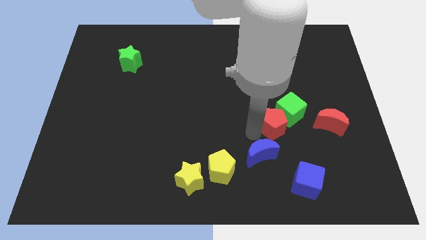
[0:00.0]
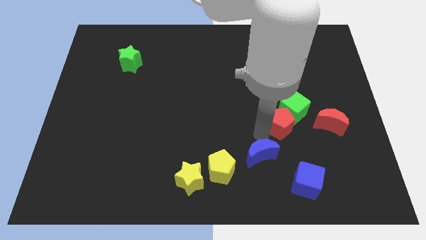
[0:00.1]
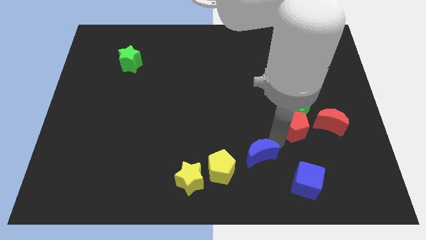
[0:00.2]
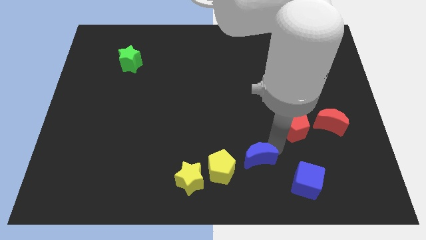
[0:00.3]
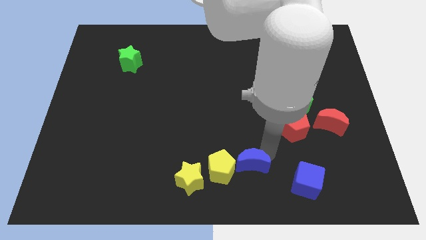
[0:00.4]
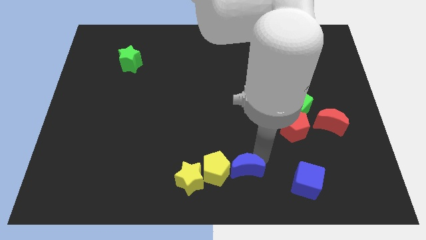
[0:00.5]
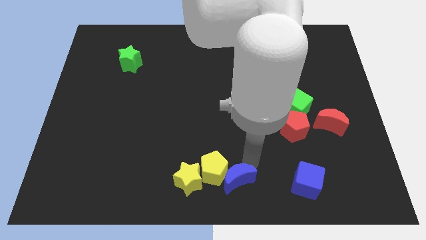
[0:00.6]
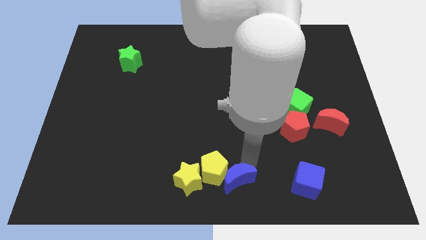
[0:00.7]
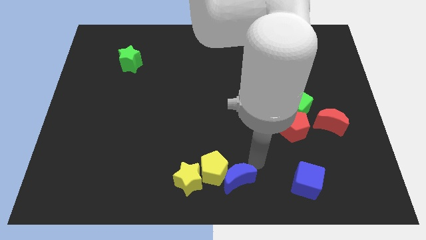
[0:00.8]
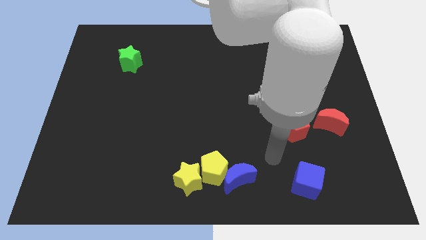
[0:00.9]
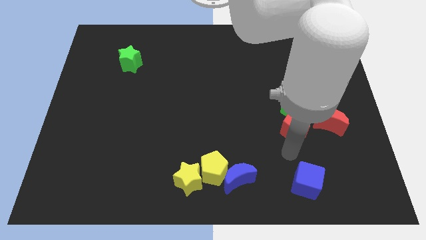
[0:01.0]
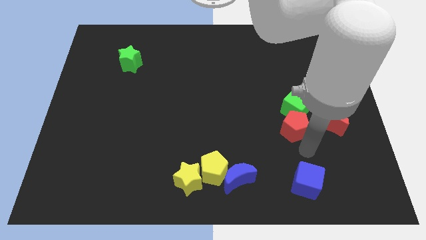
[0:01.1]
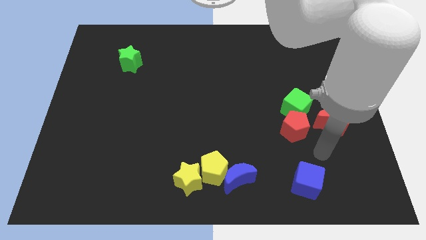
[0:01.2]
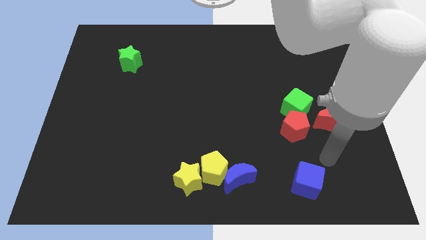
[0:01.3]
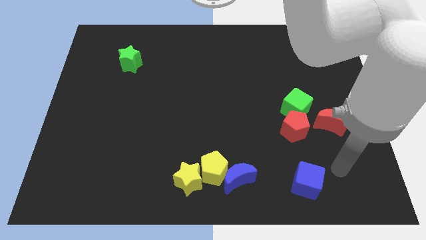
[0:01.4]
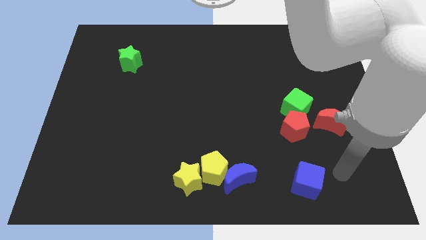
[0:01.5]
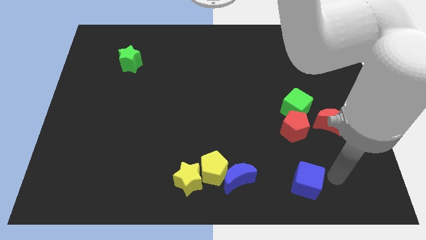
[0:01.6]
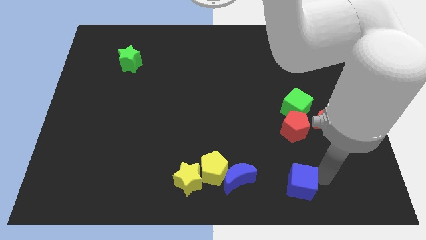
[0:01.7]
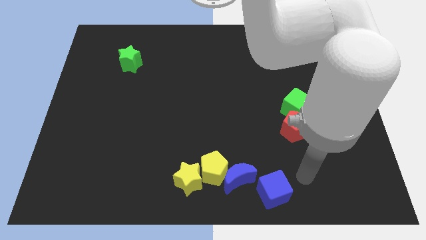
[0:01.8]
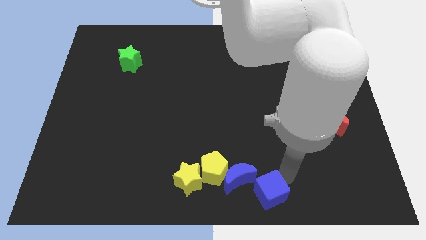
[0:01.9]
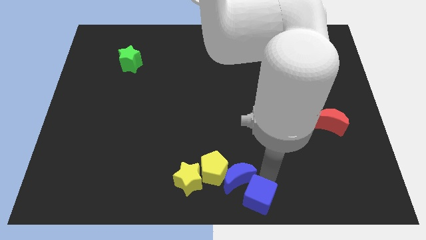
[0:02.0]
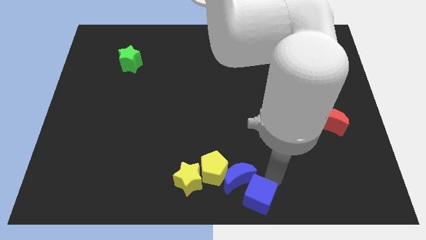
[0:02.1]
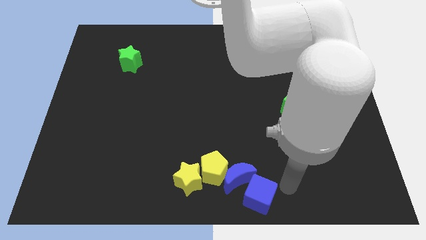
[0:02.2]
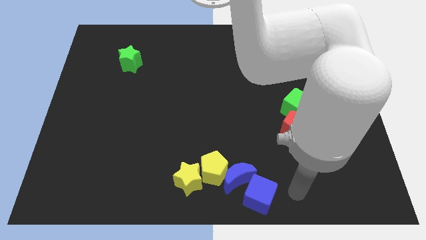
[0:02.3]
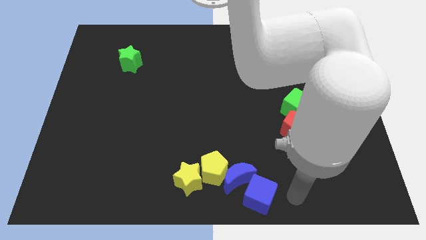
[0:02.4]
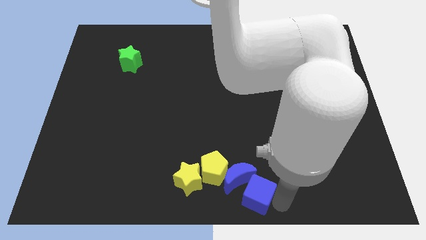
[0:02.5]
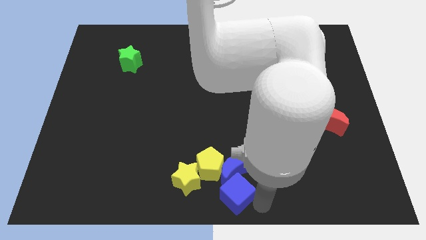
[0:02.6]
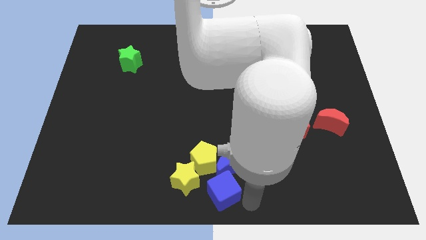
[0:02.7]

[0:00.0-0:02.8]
push a group of blocks slightly downward

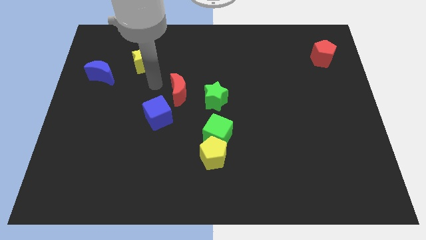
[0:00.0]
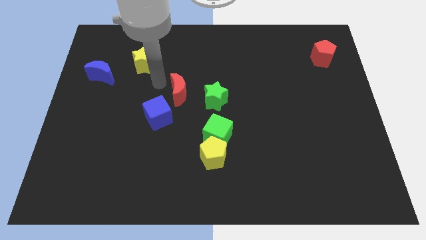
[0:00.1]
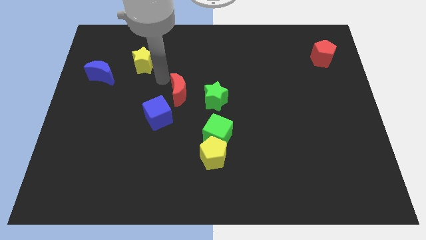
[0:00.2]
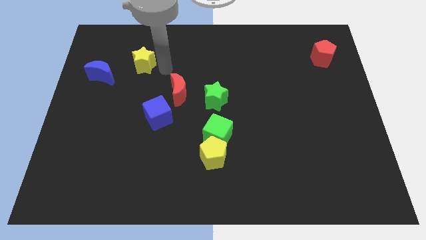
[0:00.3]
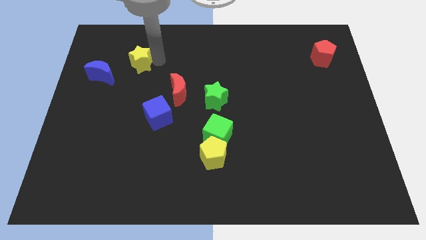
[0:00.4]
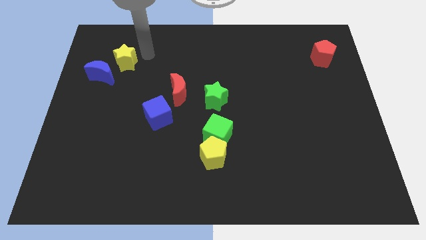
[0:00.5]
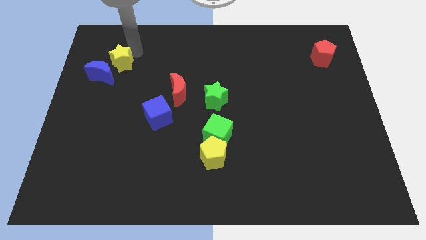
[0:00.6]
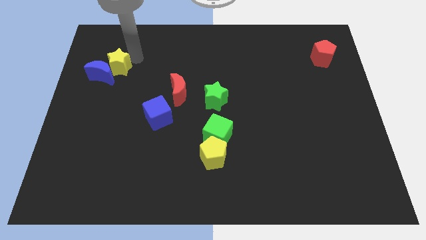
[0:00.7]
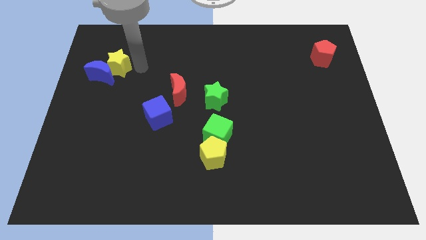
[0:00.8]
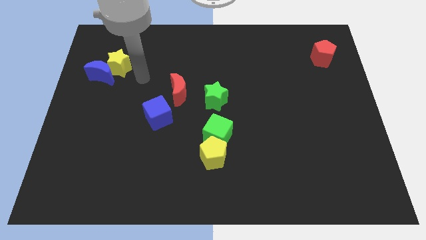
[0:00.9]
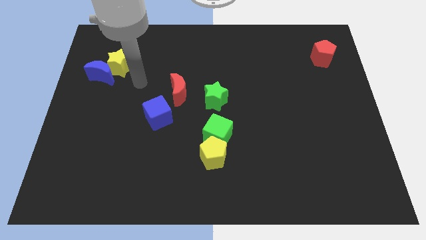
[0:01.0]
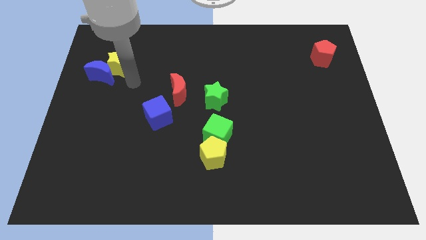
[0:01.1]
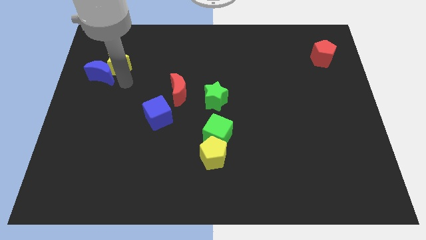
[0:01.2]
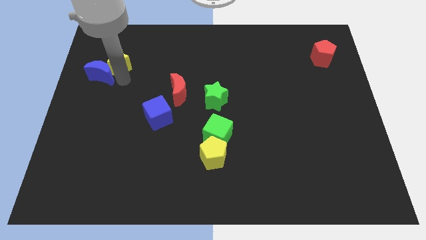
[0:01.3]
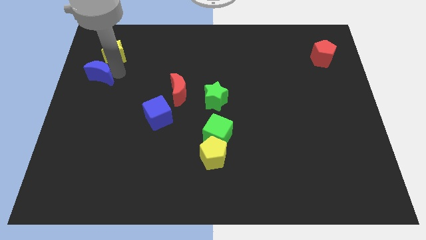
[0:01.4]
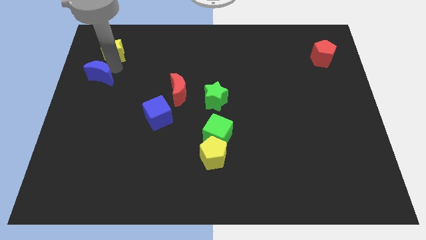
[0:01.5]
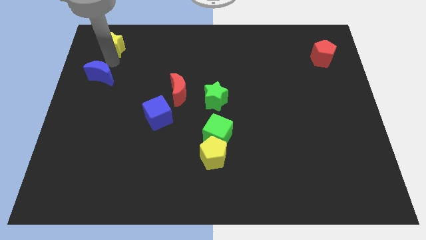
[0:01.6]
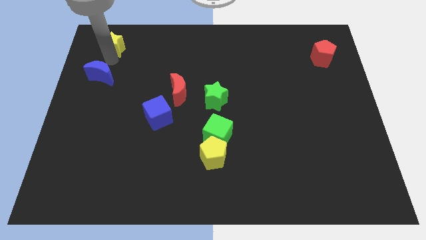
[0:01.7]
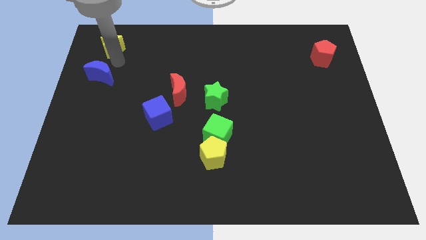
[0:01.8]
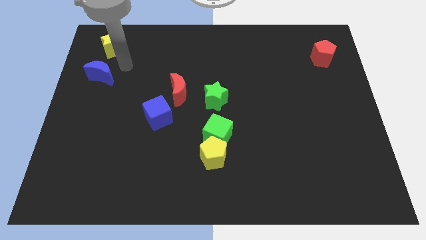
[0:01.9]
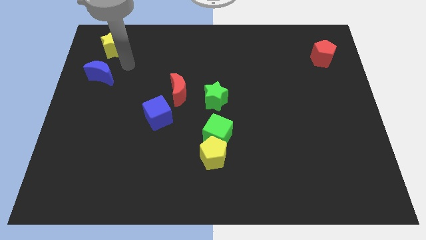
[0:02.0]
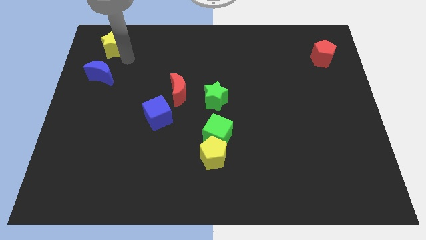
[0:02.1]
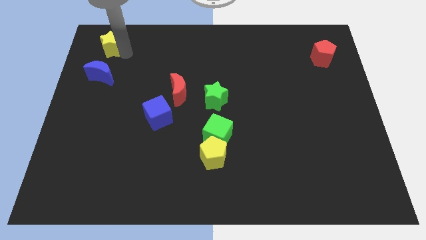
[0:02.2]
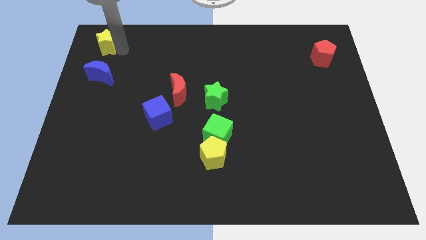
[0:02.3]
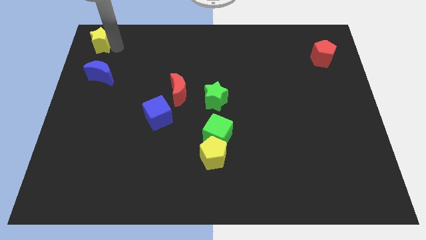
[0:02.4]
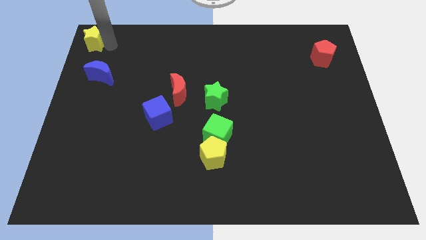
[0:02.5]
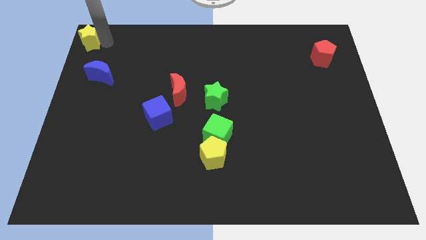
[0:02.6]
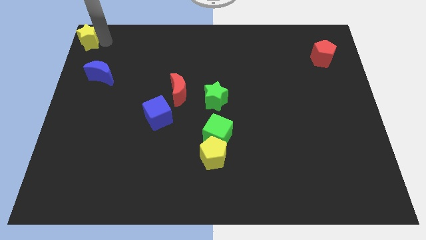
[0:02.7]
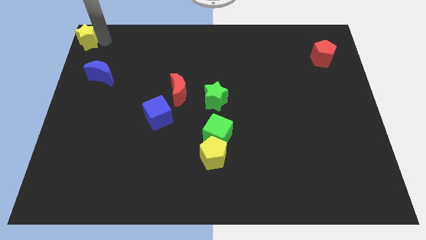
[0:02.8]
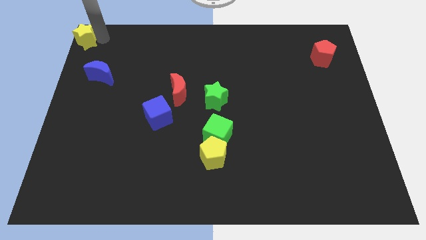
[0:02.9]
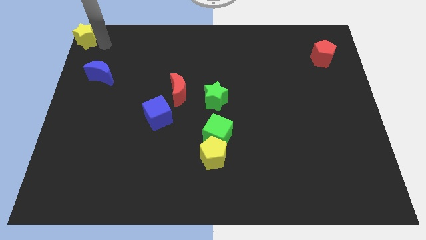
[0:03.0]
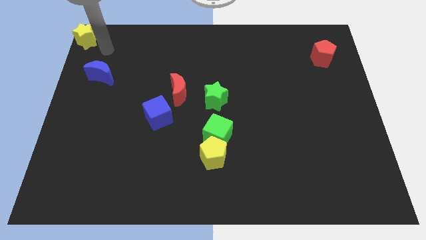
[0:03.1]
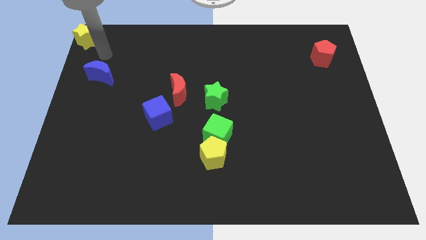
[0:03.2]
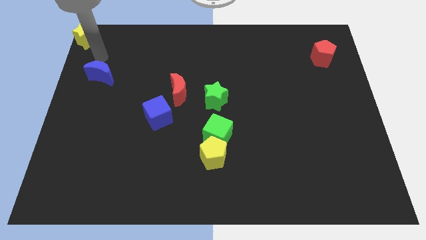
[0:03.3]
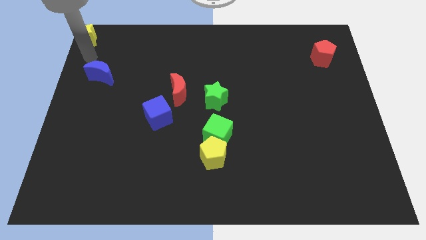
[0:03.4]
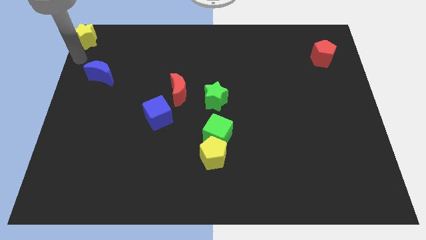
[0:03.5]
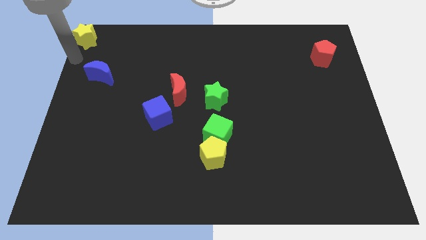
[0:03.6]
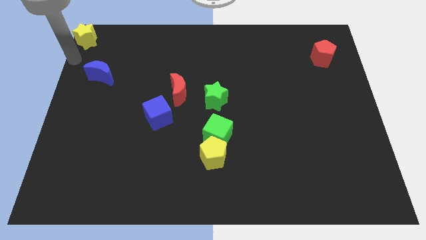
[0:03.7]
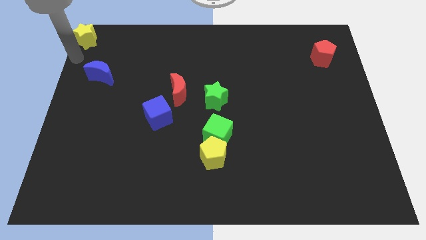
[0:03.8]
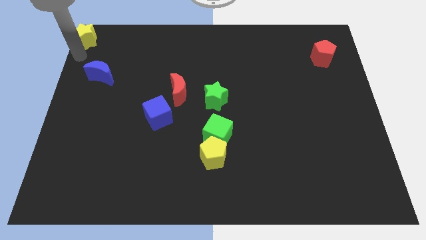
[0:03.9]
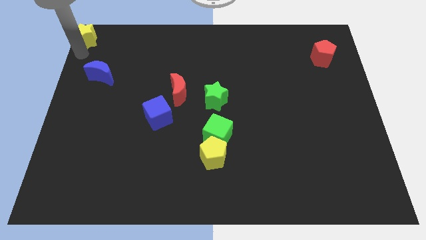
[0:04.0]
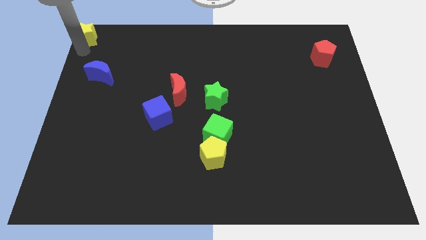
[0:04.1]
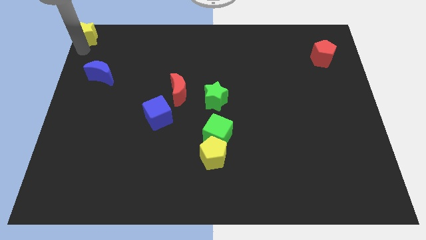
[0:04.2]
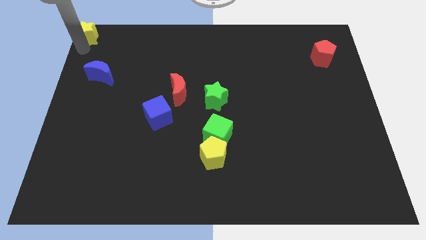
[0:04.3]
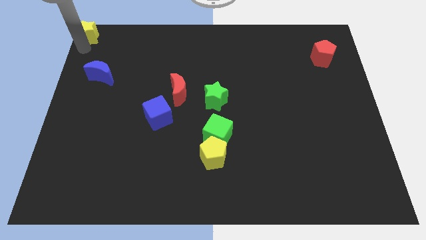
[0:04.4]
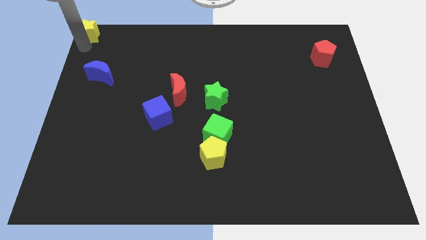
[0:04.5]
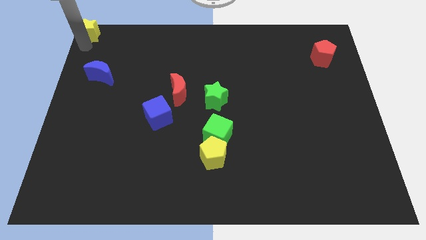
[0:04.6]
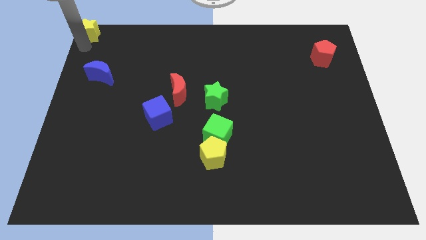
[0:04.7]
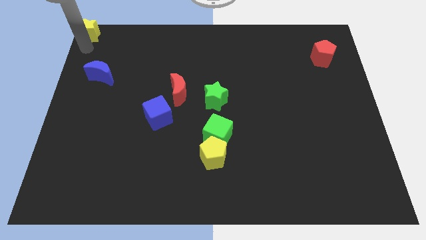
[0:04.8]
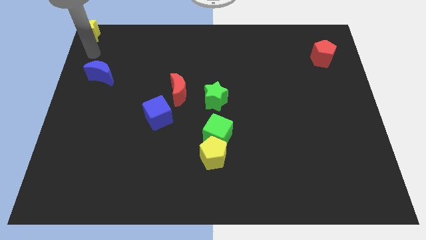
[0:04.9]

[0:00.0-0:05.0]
move the yellow star to the top left corner of the table

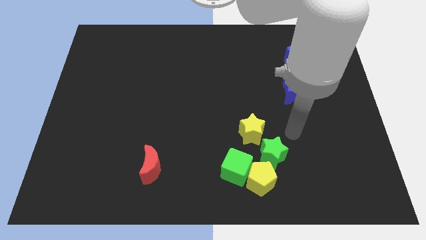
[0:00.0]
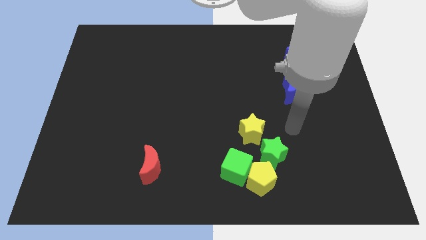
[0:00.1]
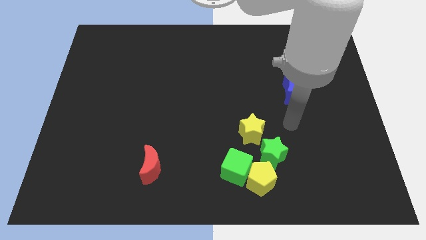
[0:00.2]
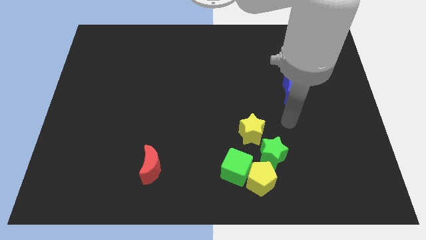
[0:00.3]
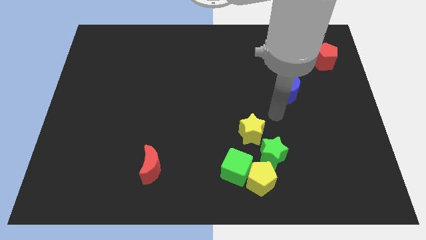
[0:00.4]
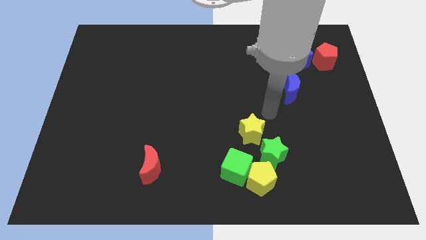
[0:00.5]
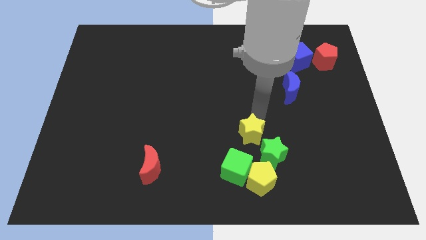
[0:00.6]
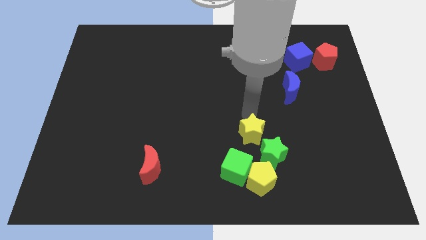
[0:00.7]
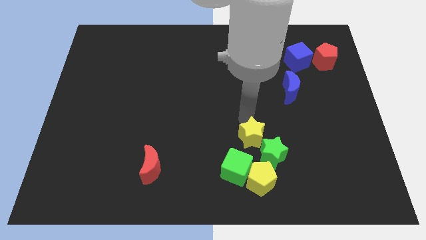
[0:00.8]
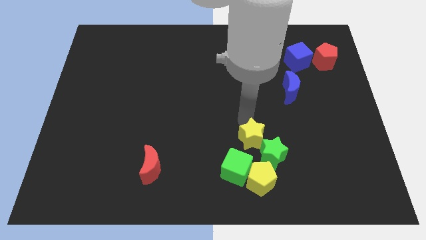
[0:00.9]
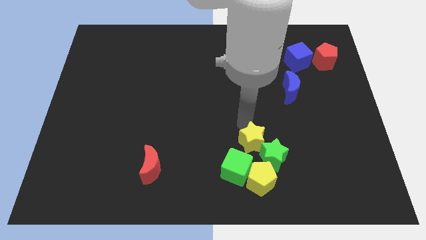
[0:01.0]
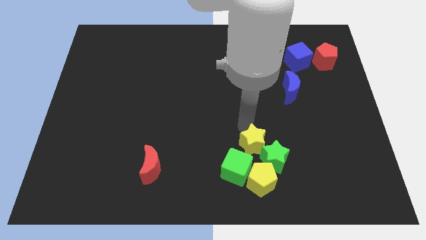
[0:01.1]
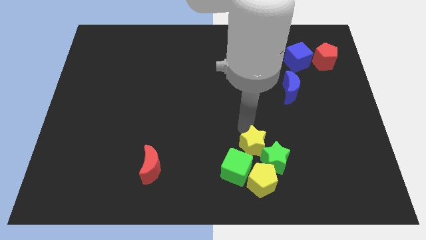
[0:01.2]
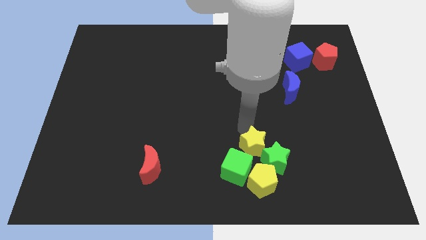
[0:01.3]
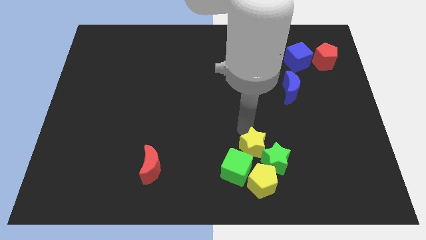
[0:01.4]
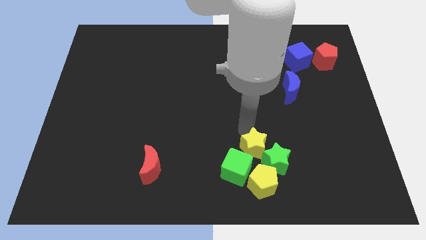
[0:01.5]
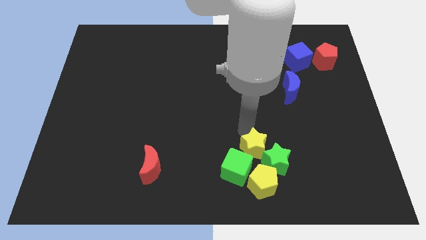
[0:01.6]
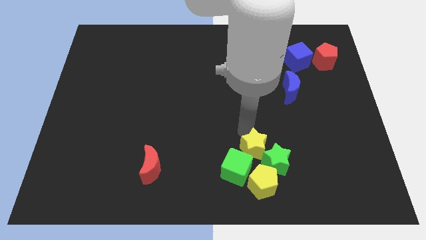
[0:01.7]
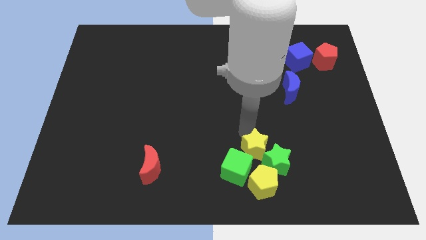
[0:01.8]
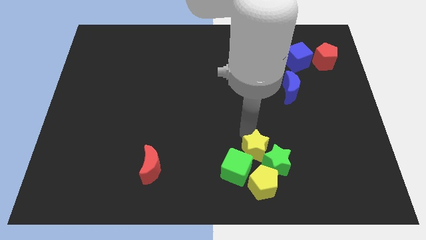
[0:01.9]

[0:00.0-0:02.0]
push the yellow star into the green star
